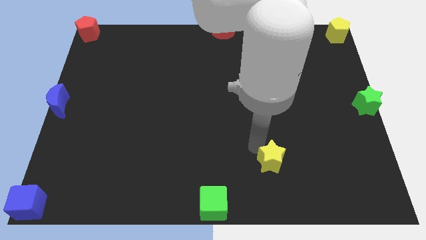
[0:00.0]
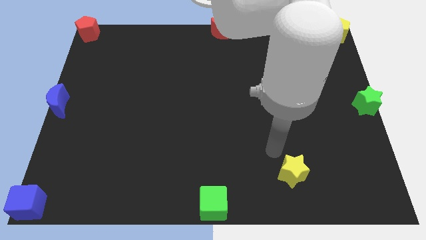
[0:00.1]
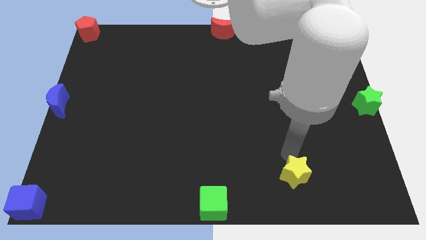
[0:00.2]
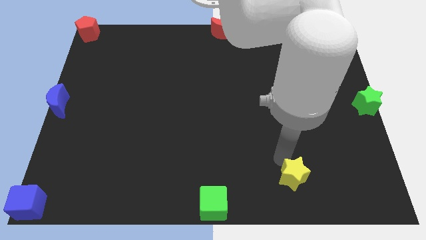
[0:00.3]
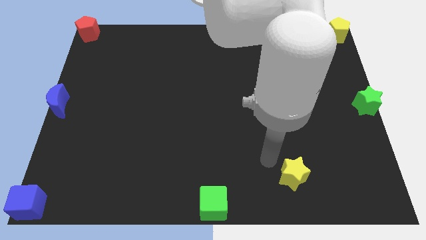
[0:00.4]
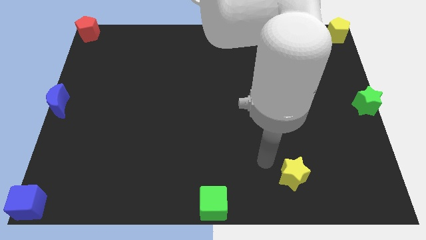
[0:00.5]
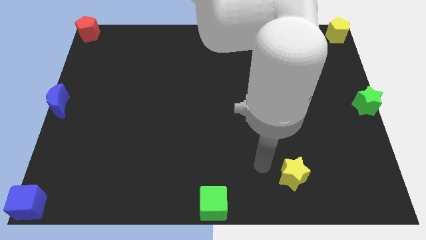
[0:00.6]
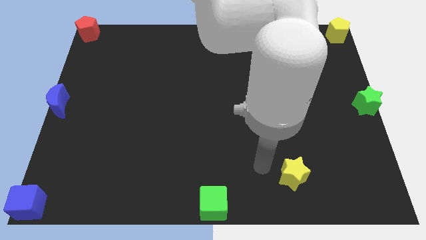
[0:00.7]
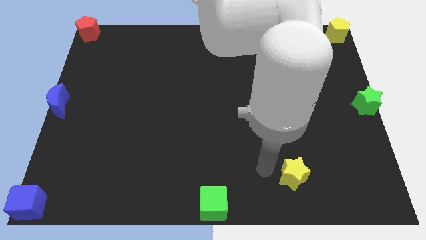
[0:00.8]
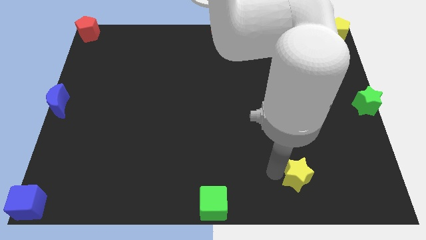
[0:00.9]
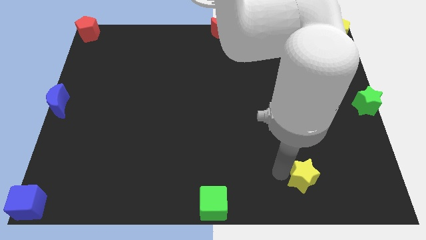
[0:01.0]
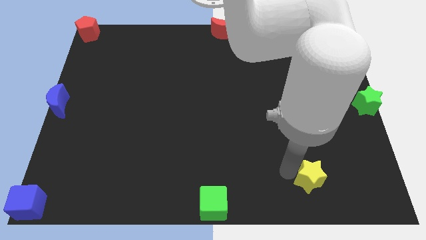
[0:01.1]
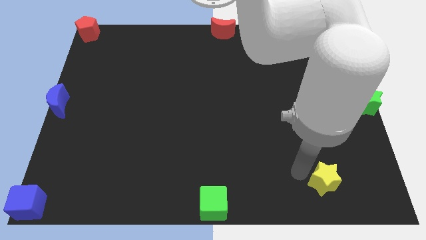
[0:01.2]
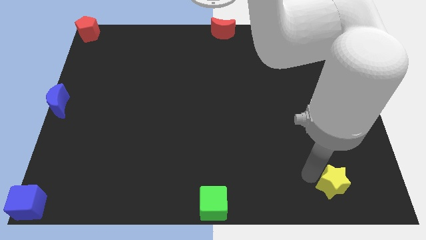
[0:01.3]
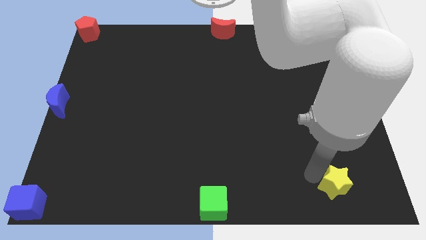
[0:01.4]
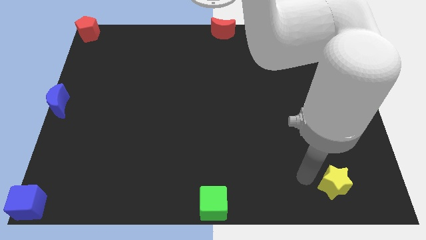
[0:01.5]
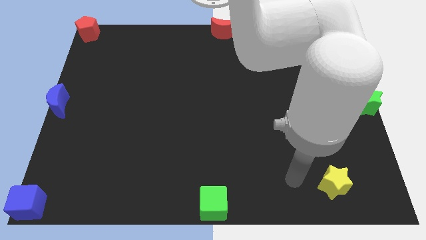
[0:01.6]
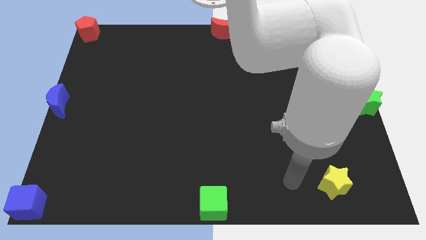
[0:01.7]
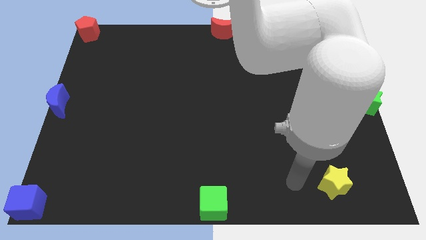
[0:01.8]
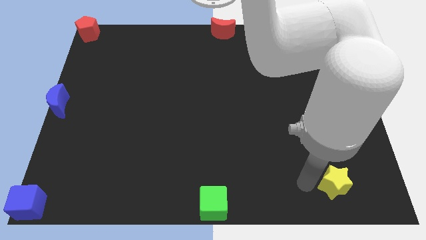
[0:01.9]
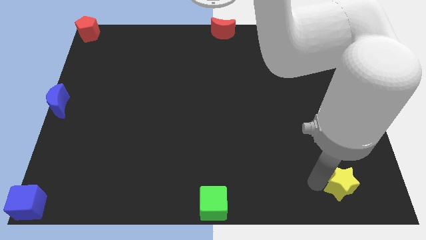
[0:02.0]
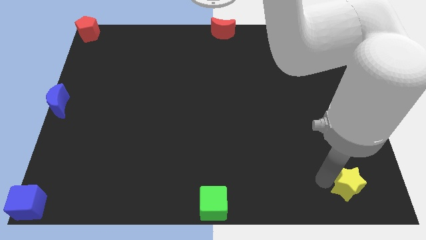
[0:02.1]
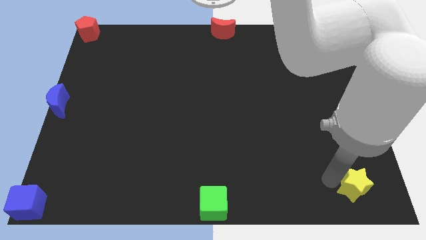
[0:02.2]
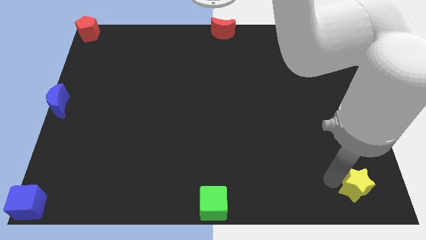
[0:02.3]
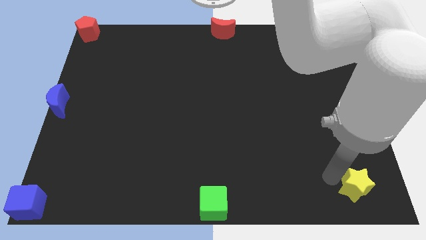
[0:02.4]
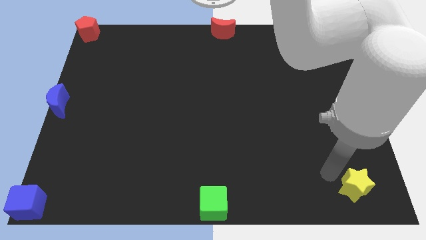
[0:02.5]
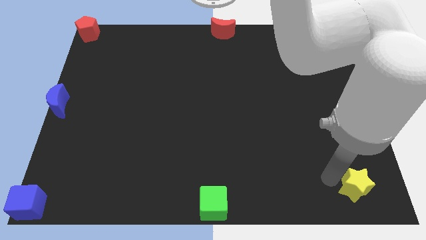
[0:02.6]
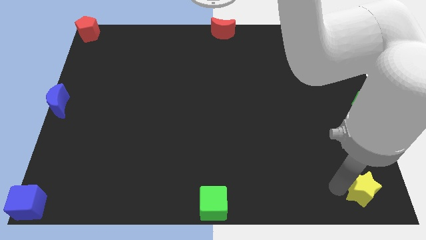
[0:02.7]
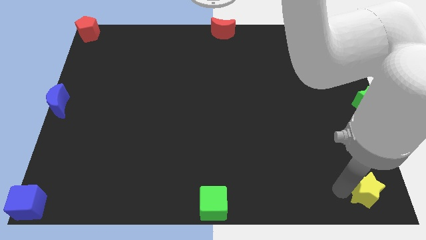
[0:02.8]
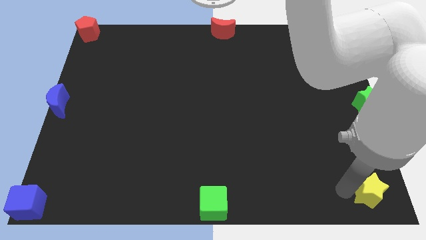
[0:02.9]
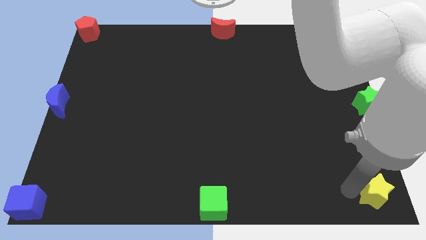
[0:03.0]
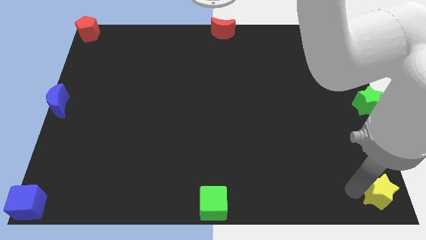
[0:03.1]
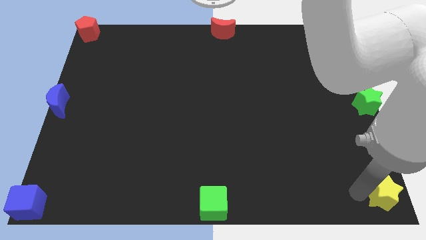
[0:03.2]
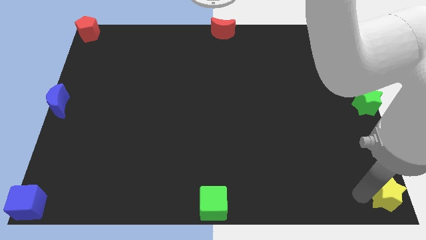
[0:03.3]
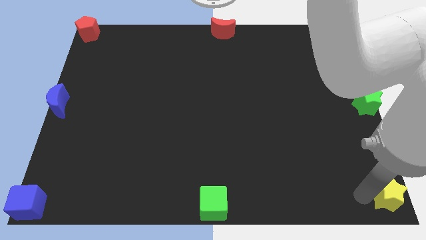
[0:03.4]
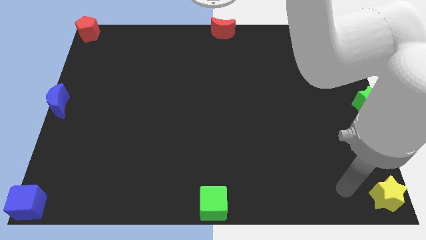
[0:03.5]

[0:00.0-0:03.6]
move the yellow star to the bottom right corner of the board

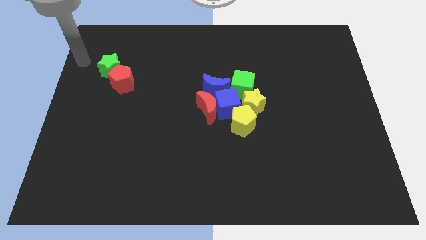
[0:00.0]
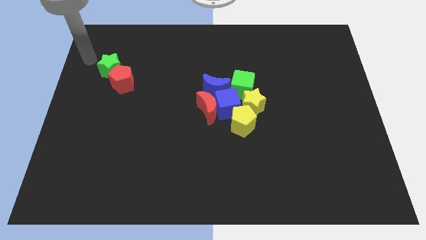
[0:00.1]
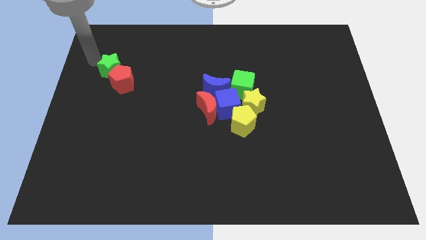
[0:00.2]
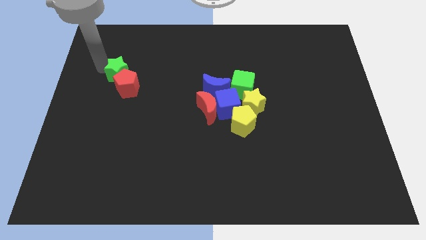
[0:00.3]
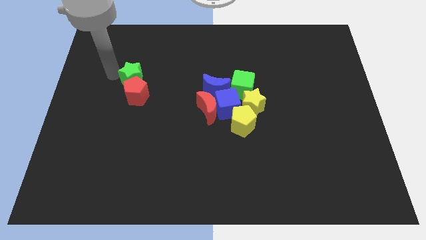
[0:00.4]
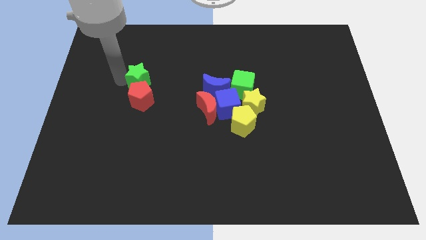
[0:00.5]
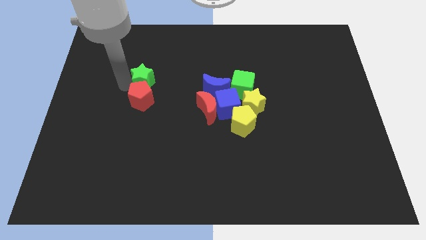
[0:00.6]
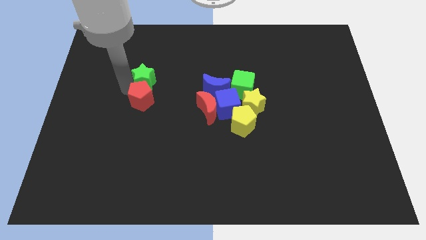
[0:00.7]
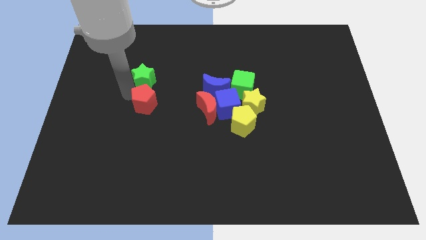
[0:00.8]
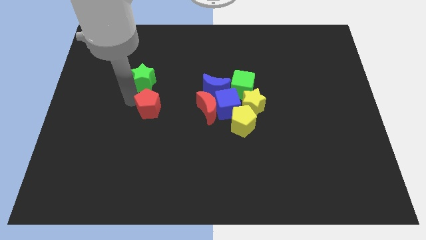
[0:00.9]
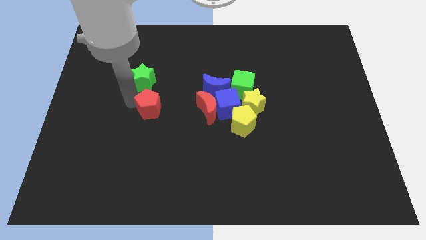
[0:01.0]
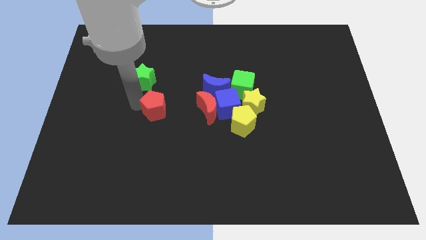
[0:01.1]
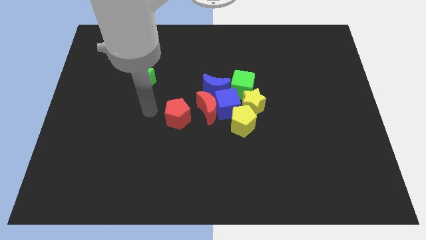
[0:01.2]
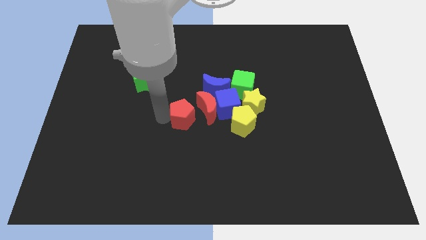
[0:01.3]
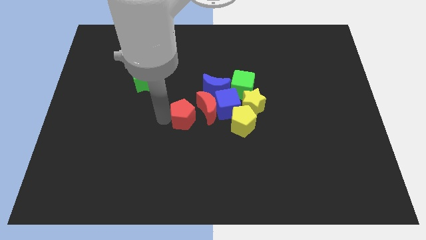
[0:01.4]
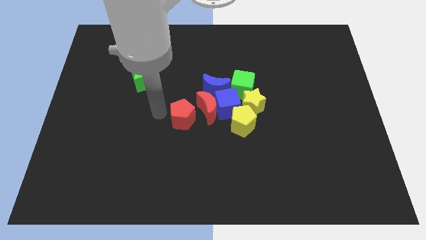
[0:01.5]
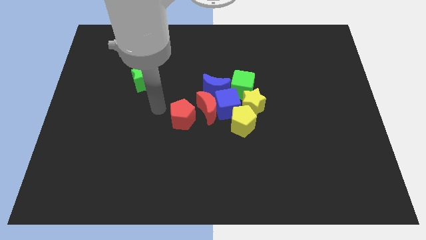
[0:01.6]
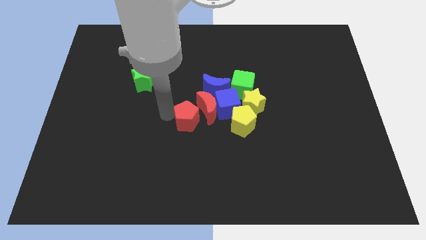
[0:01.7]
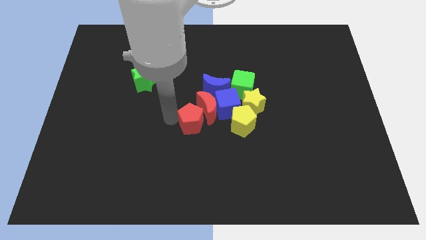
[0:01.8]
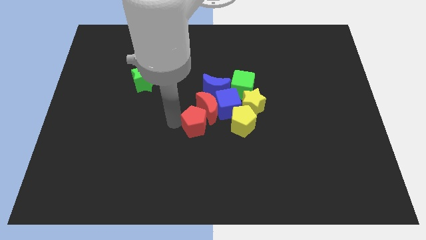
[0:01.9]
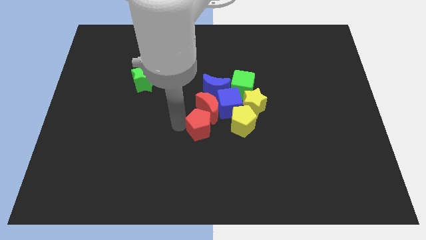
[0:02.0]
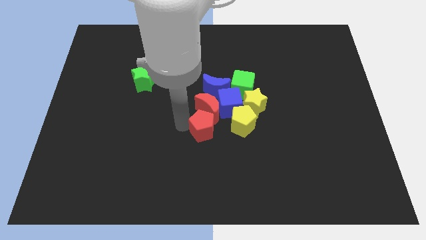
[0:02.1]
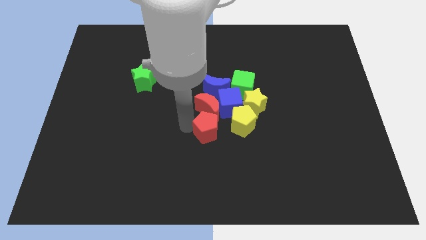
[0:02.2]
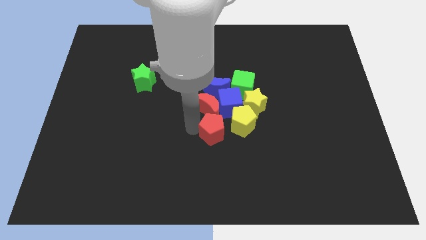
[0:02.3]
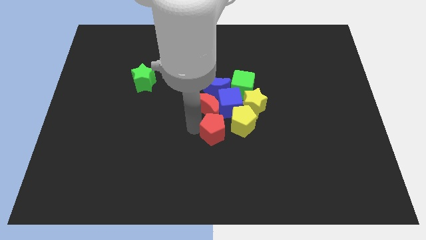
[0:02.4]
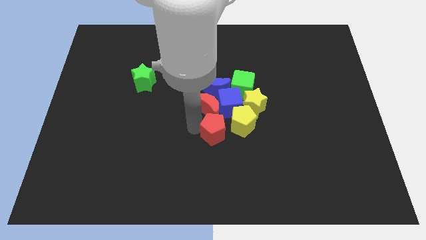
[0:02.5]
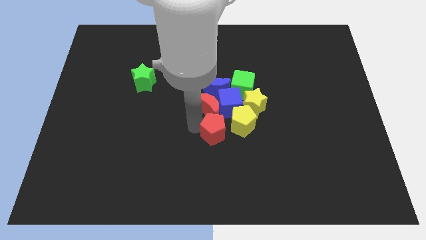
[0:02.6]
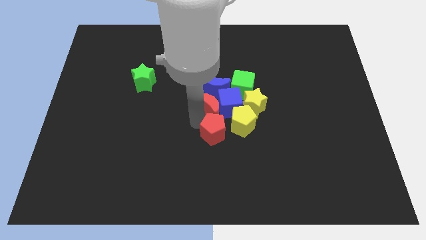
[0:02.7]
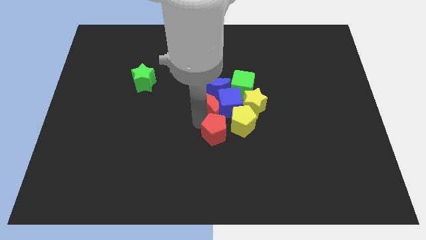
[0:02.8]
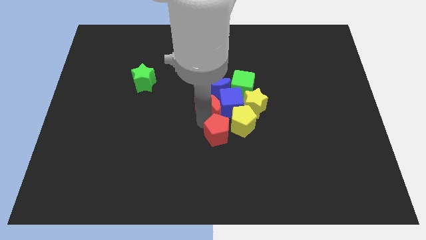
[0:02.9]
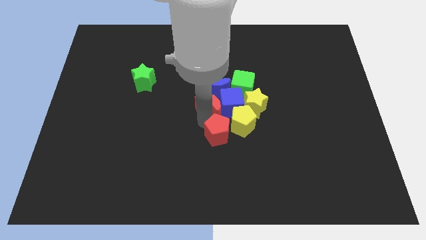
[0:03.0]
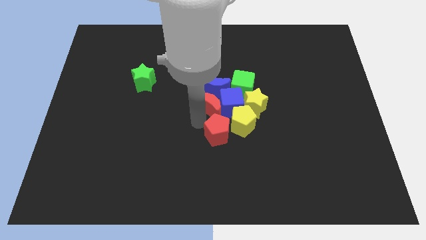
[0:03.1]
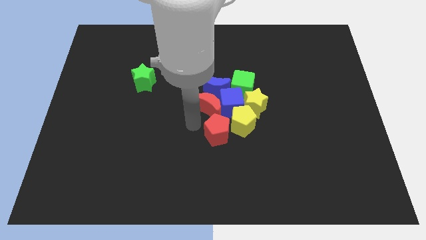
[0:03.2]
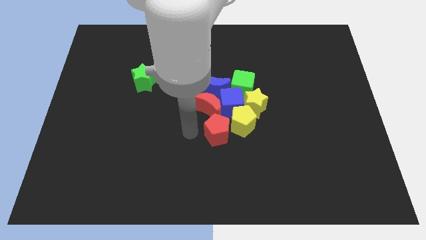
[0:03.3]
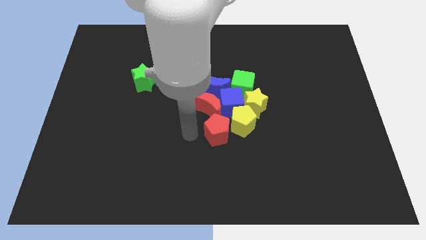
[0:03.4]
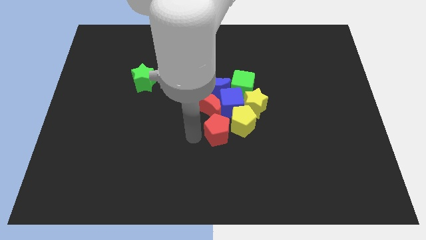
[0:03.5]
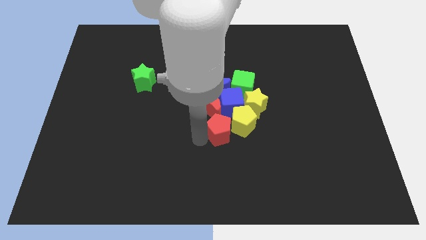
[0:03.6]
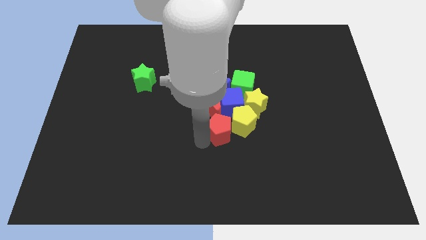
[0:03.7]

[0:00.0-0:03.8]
push the red pentagon into the yellow pentagon

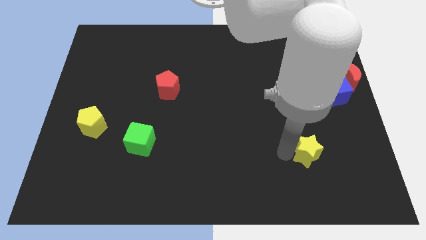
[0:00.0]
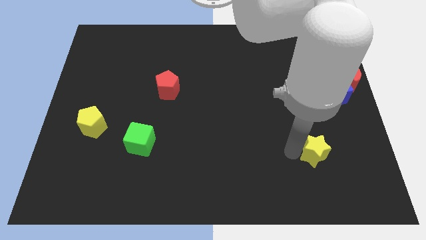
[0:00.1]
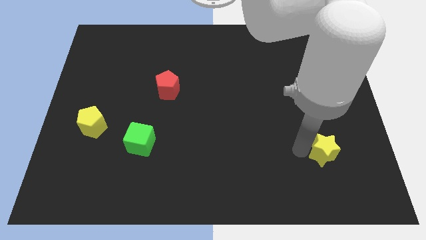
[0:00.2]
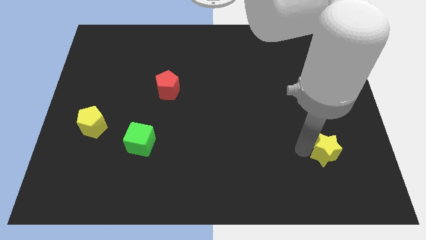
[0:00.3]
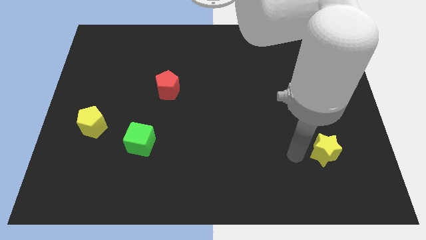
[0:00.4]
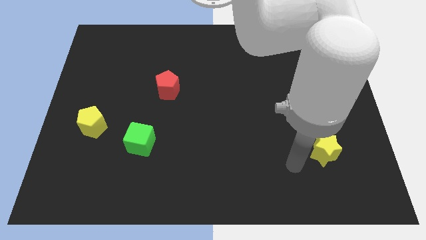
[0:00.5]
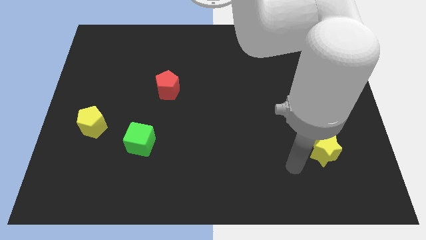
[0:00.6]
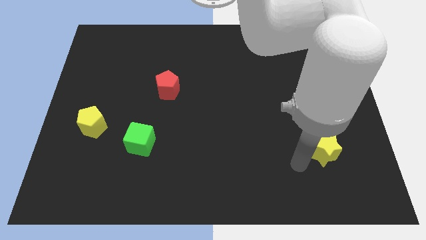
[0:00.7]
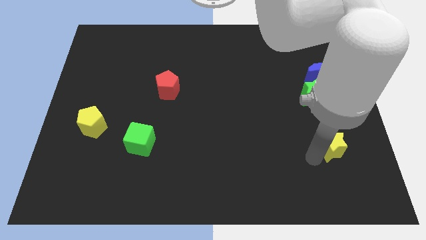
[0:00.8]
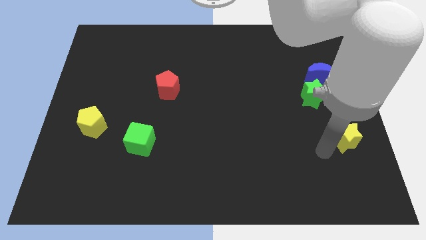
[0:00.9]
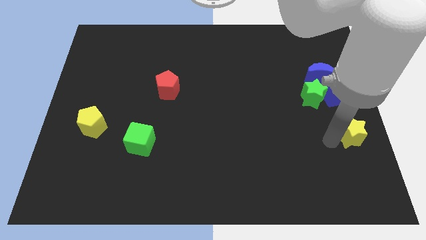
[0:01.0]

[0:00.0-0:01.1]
push the yellow star to the bottom of the blue cube

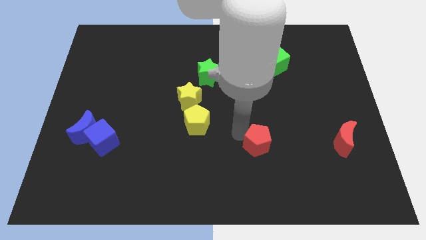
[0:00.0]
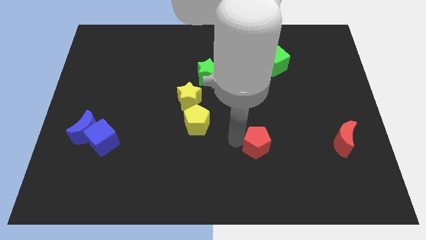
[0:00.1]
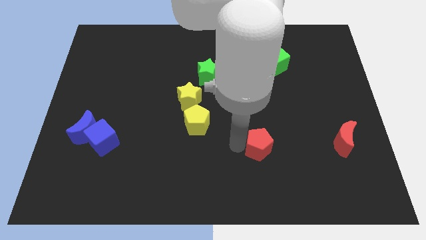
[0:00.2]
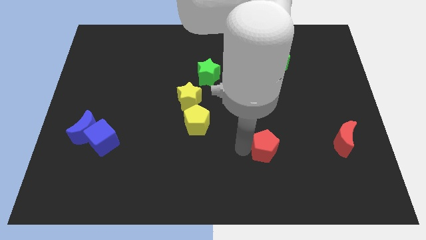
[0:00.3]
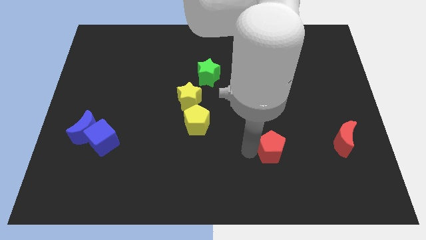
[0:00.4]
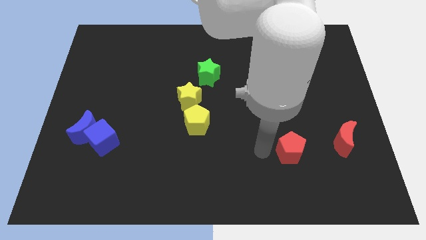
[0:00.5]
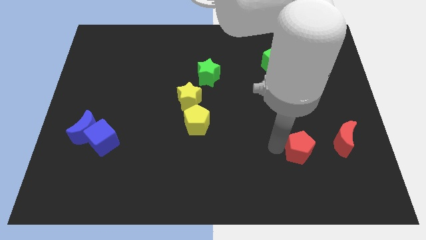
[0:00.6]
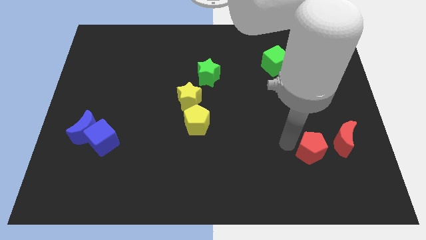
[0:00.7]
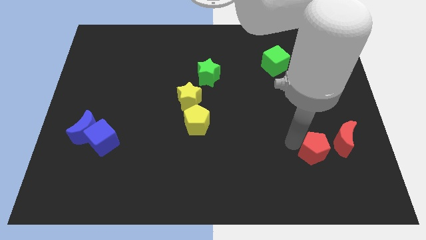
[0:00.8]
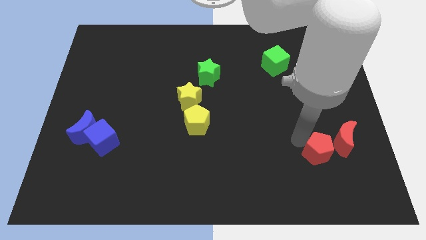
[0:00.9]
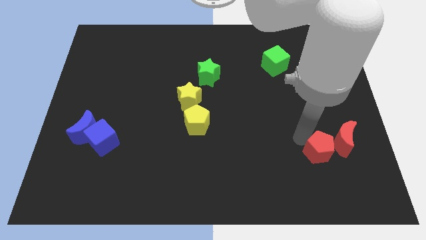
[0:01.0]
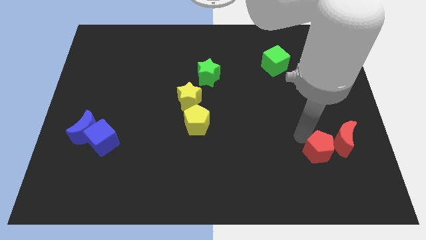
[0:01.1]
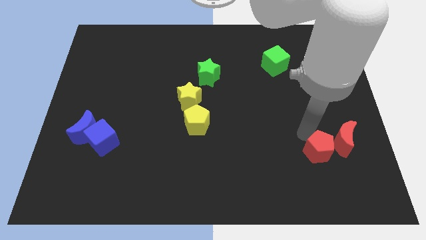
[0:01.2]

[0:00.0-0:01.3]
push the red pentagon to the left of the red moon
